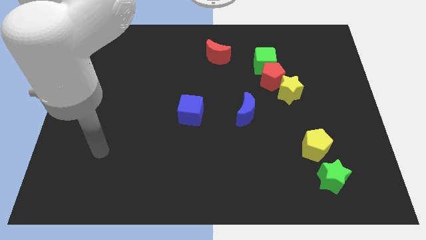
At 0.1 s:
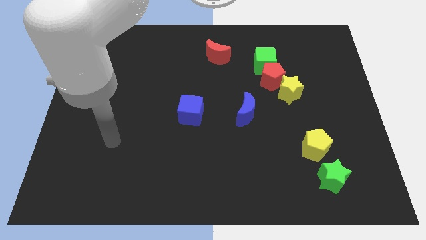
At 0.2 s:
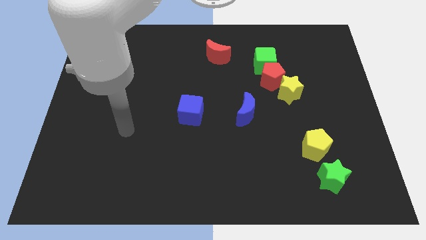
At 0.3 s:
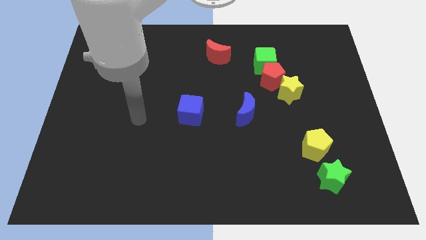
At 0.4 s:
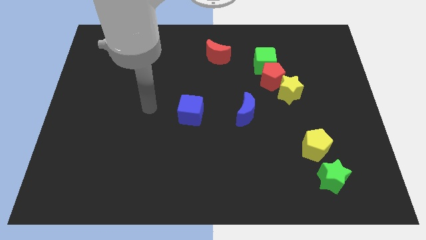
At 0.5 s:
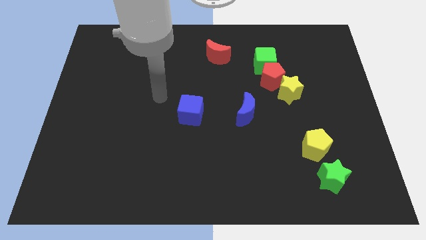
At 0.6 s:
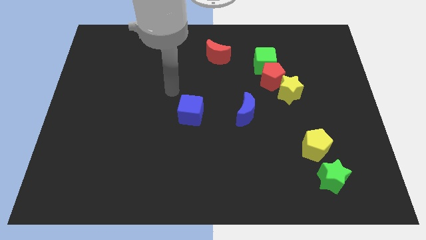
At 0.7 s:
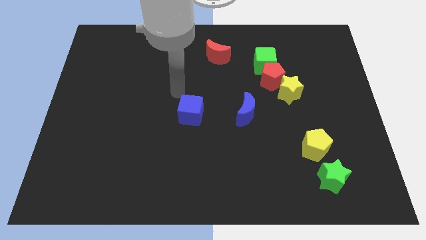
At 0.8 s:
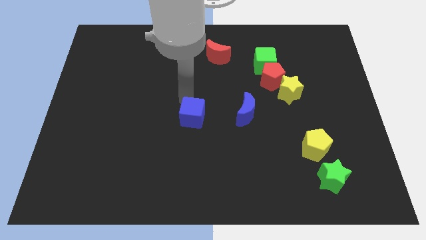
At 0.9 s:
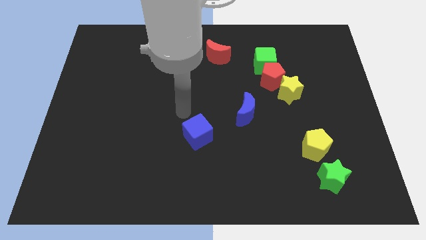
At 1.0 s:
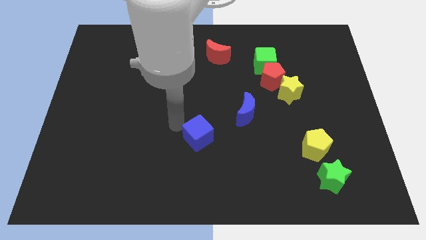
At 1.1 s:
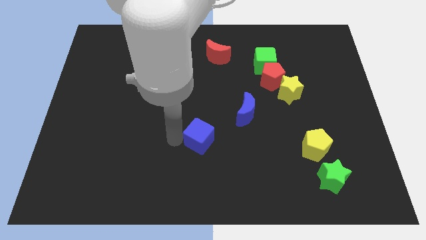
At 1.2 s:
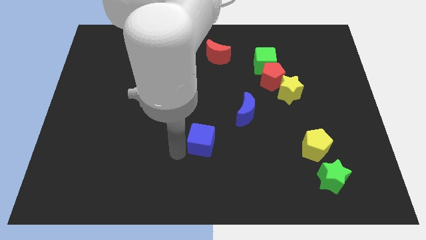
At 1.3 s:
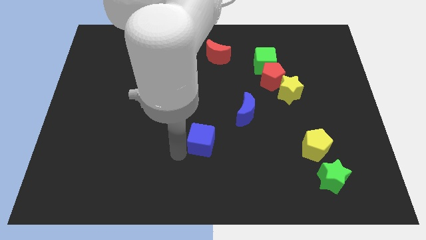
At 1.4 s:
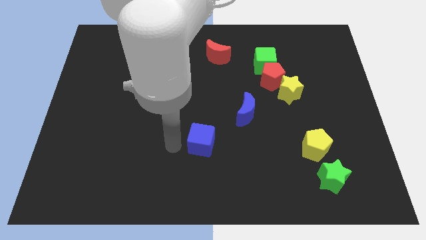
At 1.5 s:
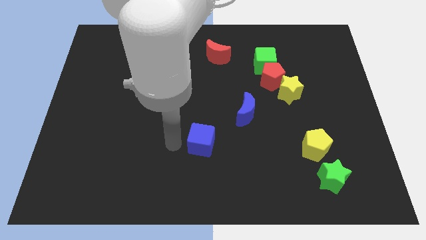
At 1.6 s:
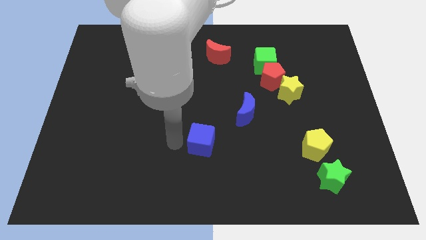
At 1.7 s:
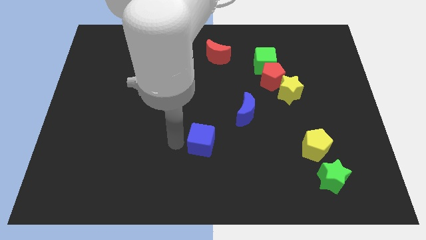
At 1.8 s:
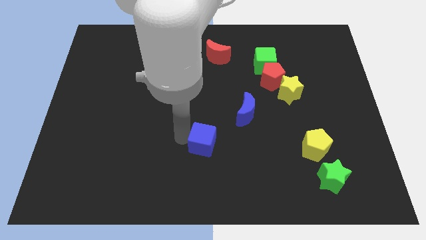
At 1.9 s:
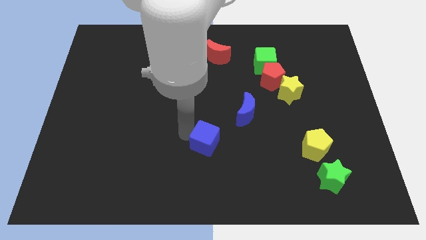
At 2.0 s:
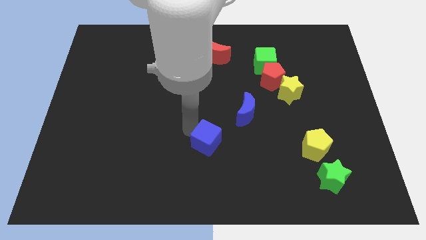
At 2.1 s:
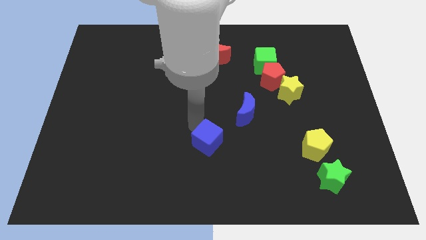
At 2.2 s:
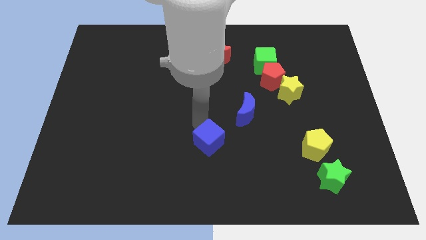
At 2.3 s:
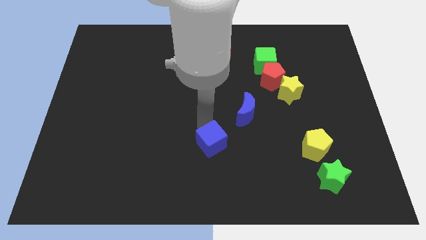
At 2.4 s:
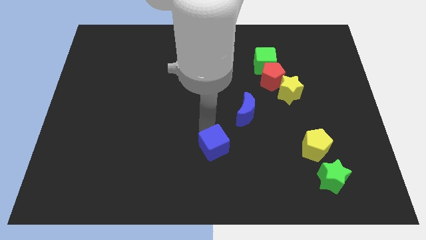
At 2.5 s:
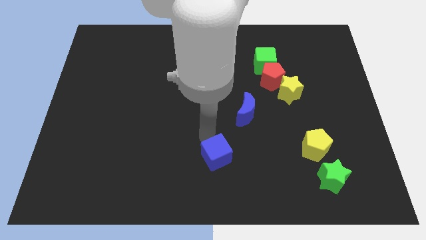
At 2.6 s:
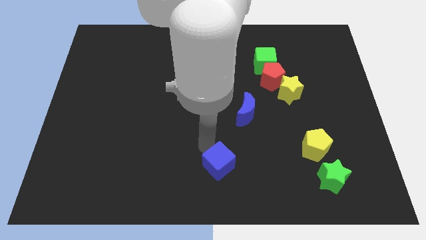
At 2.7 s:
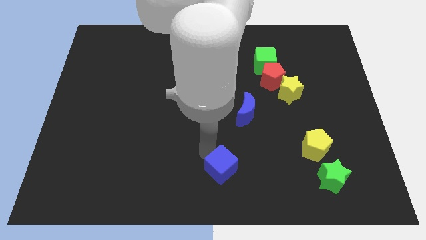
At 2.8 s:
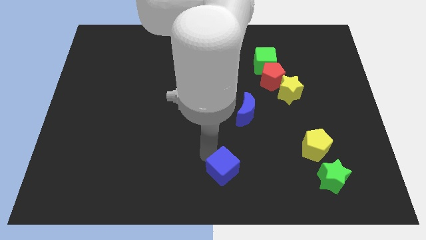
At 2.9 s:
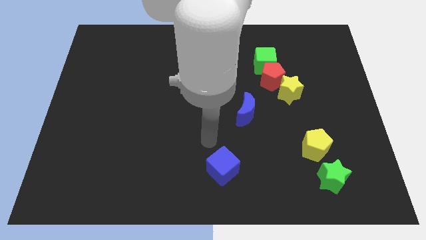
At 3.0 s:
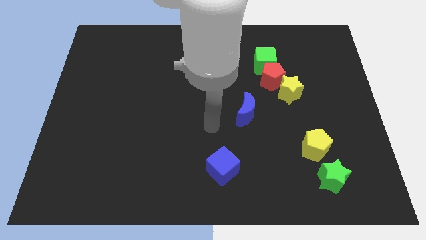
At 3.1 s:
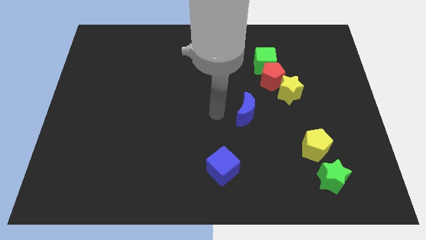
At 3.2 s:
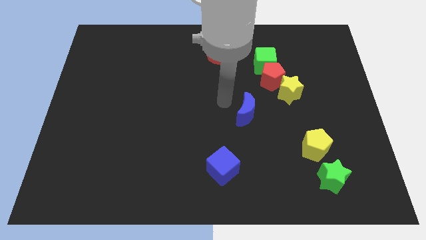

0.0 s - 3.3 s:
move the blue cube below the blue moon

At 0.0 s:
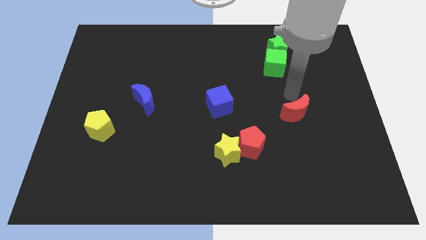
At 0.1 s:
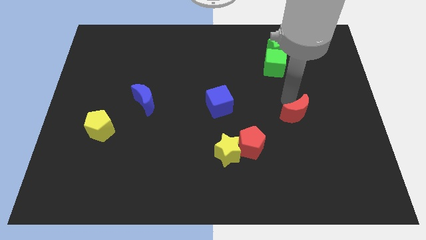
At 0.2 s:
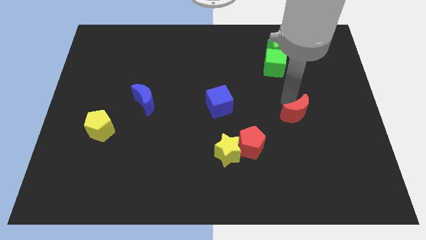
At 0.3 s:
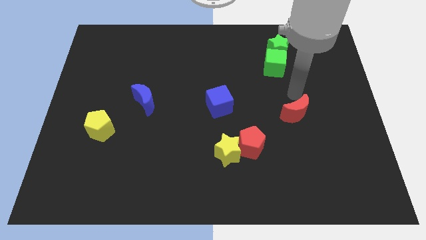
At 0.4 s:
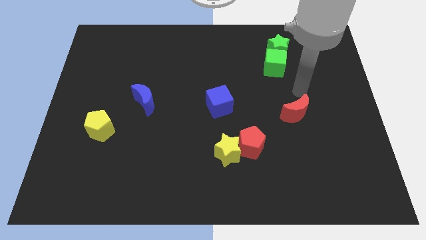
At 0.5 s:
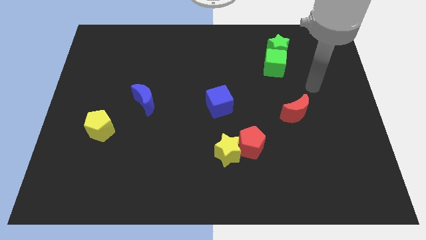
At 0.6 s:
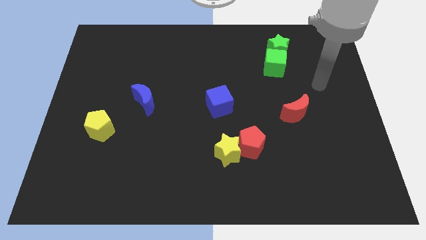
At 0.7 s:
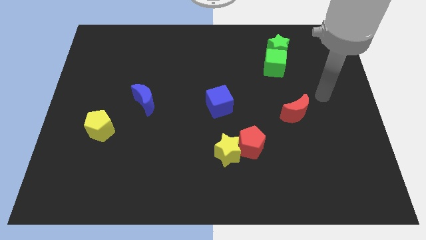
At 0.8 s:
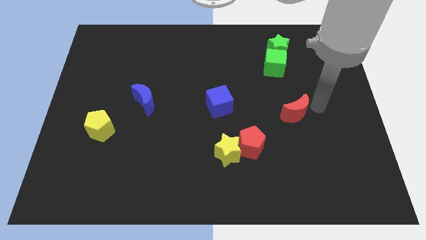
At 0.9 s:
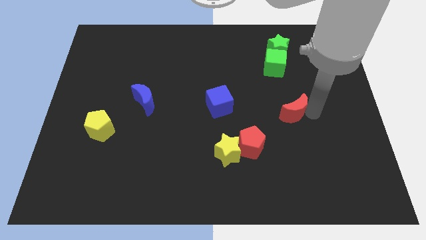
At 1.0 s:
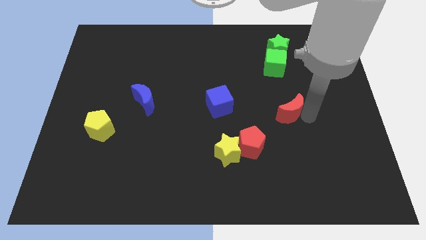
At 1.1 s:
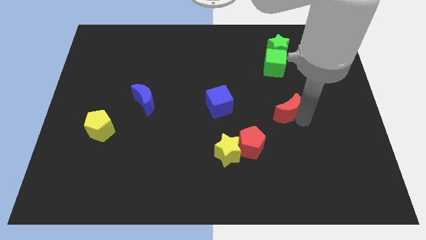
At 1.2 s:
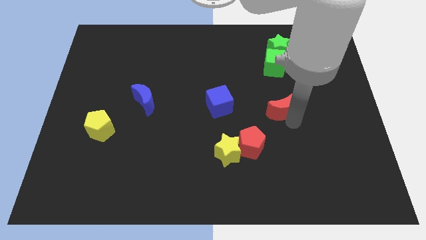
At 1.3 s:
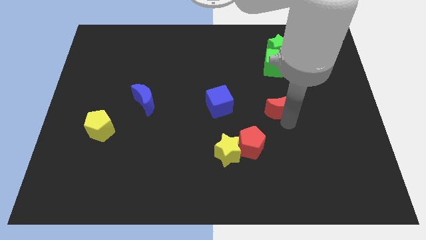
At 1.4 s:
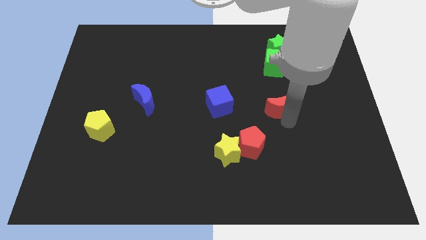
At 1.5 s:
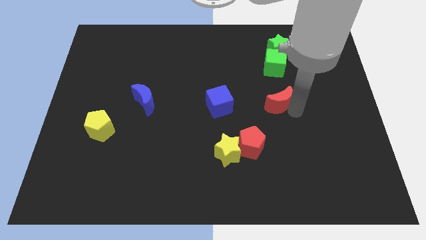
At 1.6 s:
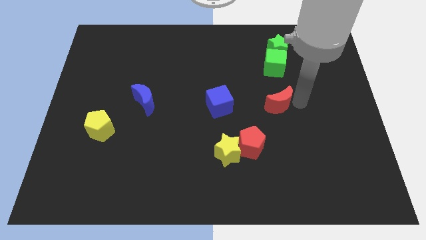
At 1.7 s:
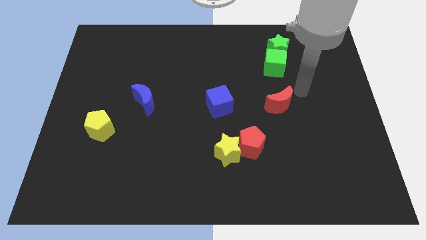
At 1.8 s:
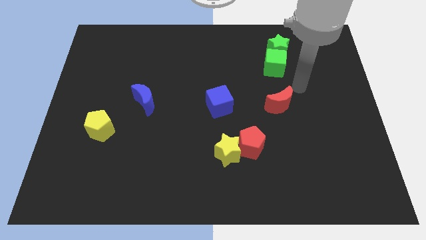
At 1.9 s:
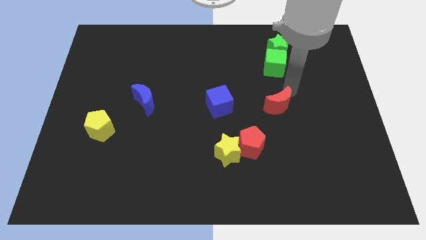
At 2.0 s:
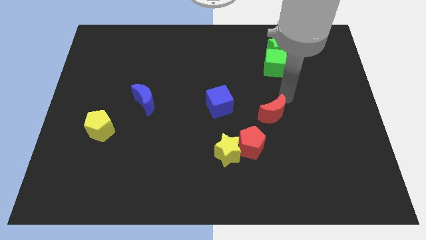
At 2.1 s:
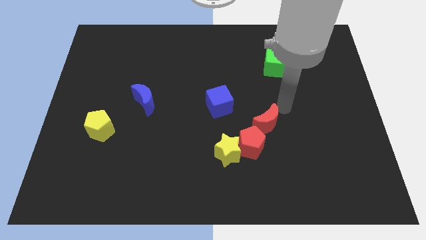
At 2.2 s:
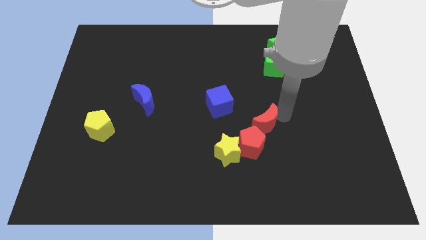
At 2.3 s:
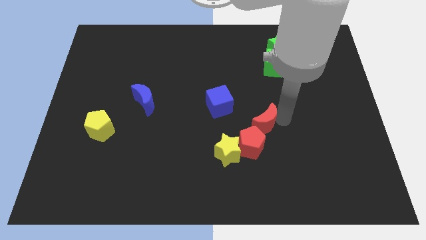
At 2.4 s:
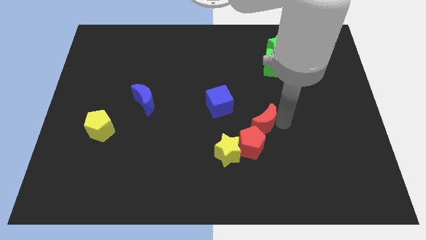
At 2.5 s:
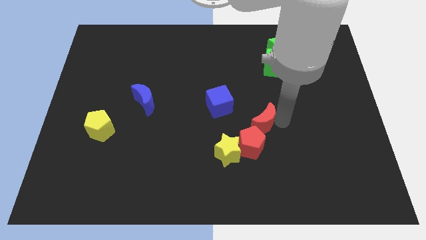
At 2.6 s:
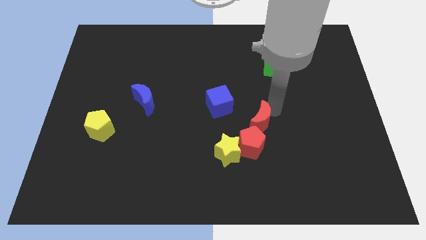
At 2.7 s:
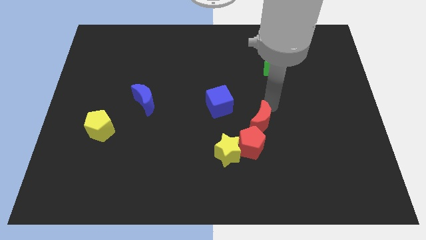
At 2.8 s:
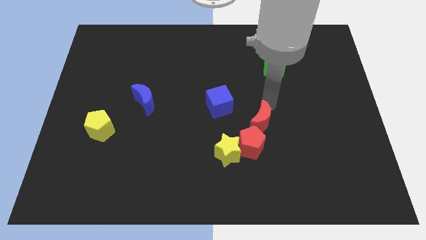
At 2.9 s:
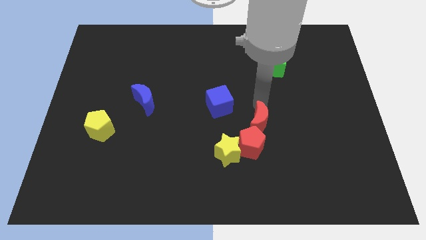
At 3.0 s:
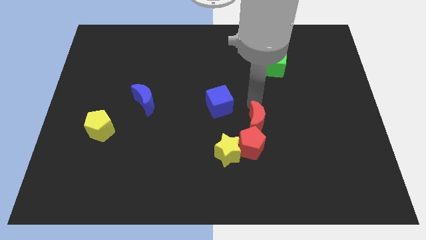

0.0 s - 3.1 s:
place the red crescent towards the red pentagon

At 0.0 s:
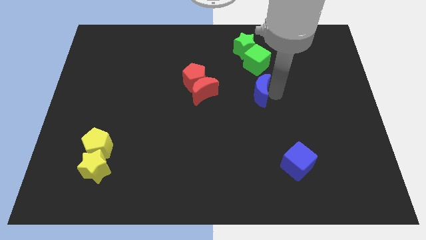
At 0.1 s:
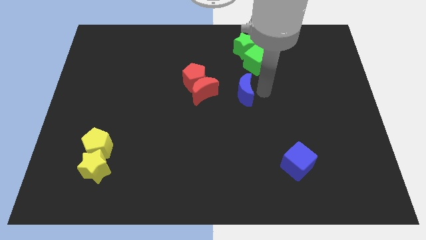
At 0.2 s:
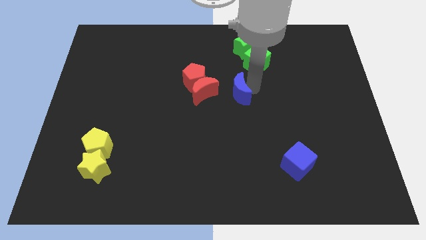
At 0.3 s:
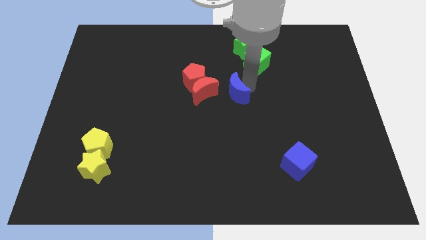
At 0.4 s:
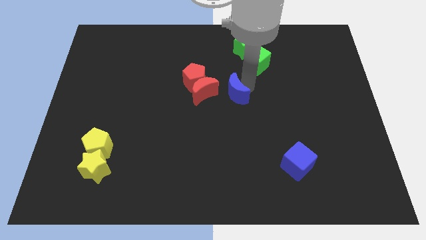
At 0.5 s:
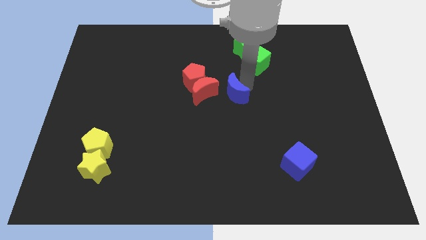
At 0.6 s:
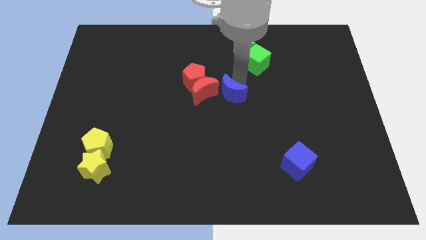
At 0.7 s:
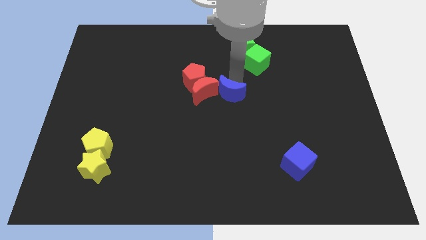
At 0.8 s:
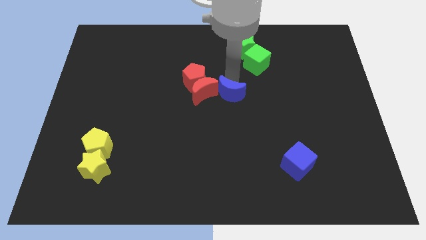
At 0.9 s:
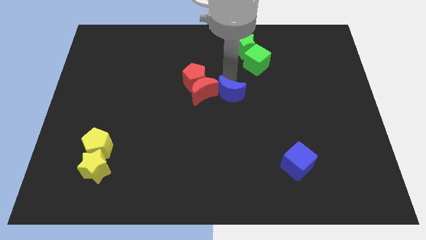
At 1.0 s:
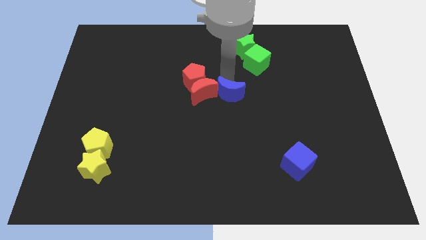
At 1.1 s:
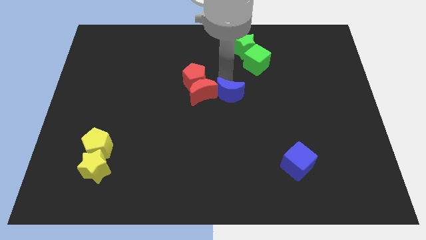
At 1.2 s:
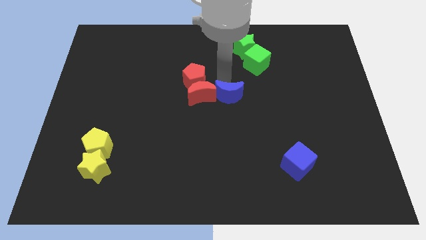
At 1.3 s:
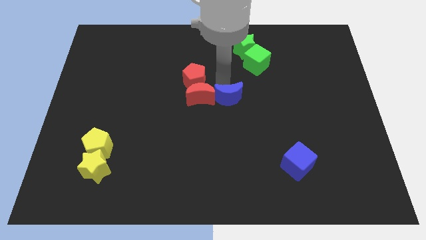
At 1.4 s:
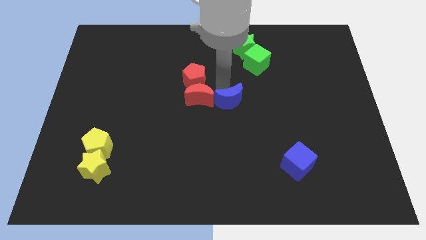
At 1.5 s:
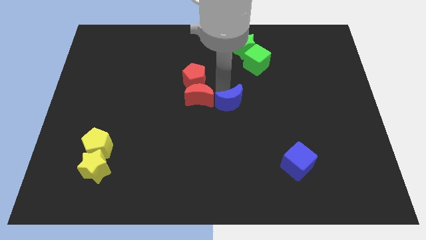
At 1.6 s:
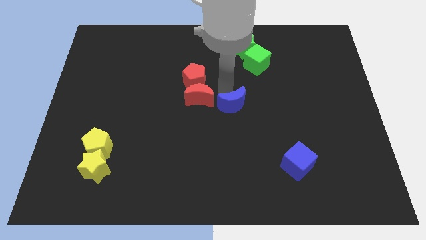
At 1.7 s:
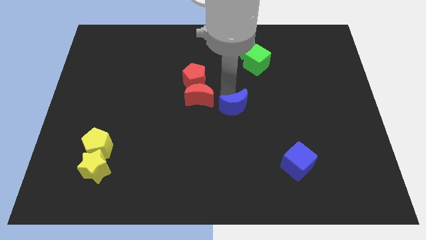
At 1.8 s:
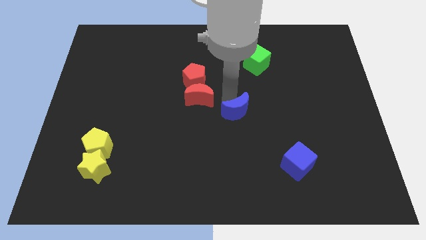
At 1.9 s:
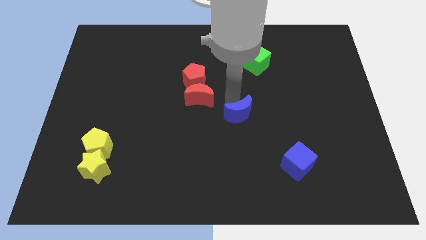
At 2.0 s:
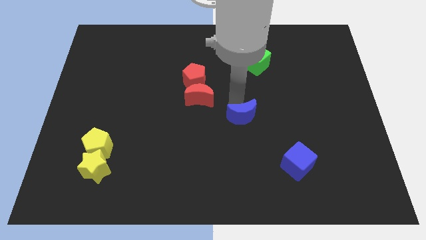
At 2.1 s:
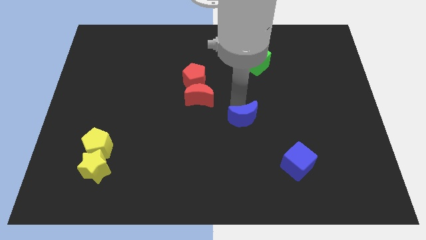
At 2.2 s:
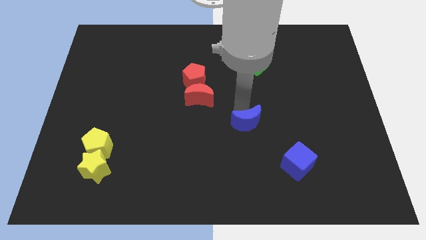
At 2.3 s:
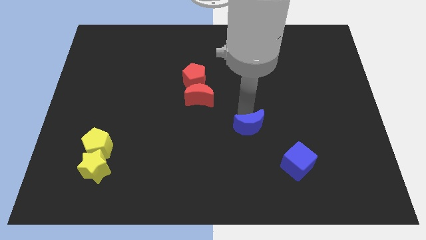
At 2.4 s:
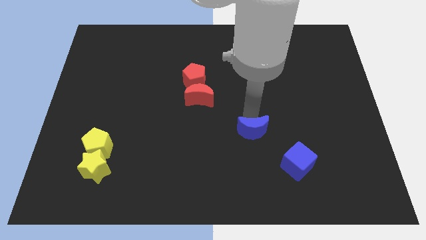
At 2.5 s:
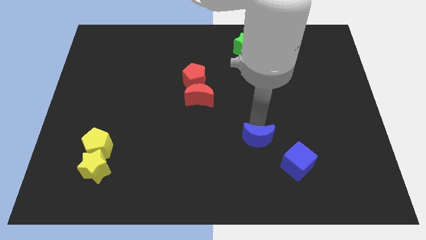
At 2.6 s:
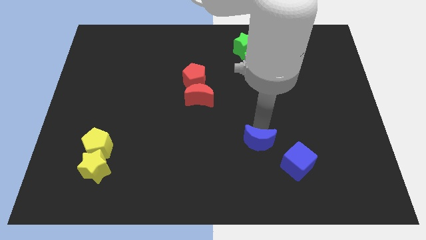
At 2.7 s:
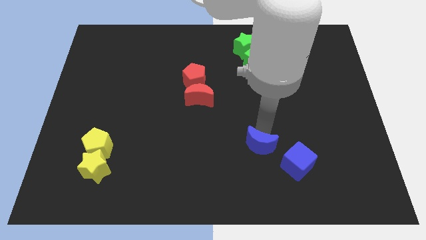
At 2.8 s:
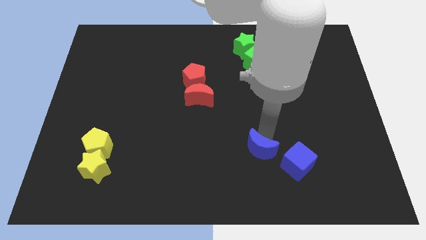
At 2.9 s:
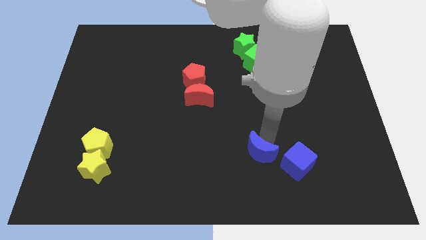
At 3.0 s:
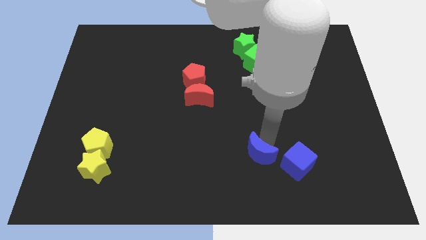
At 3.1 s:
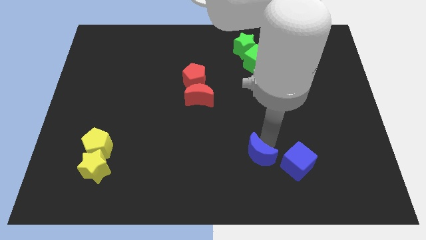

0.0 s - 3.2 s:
move the blue crescent left to the blue cube
